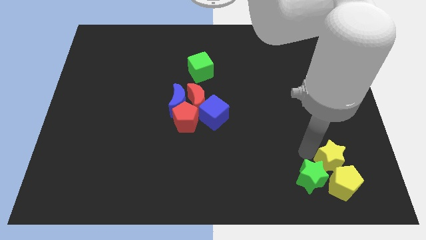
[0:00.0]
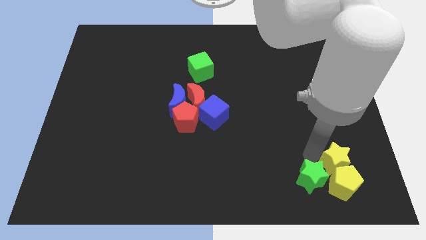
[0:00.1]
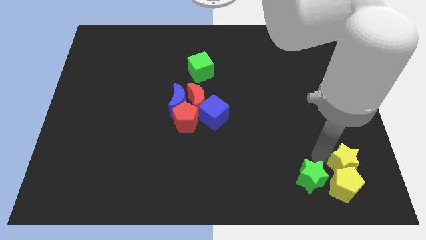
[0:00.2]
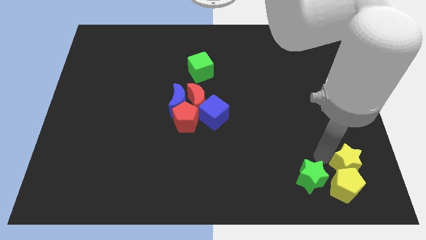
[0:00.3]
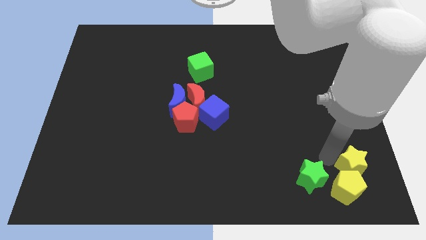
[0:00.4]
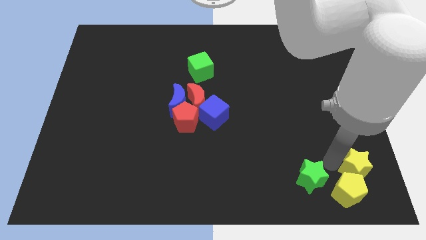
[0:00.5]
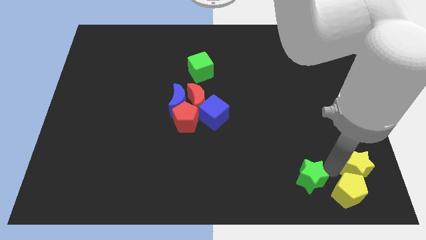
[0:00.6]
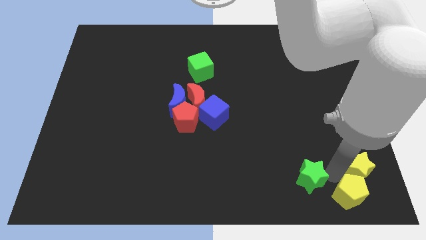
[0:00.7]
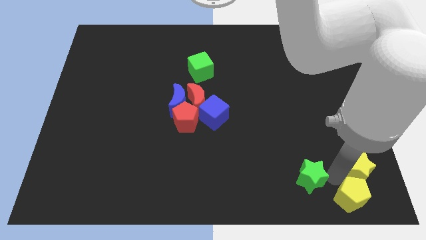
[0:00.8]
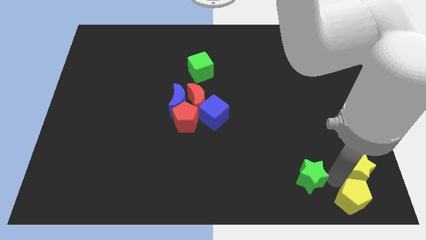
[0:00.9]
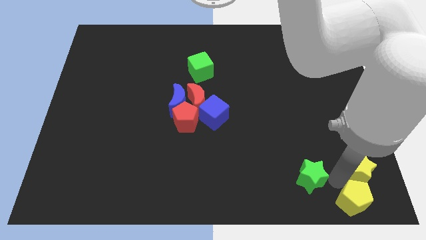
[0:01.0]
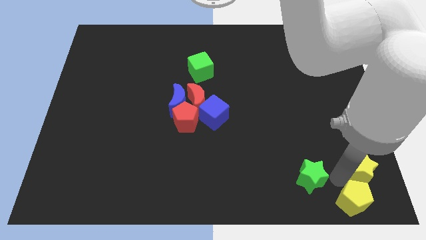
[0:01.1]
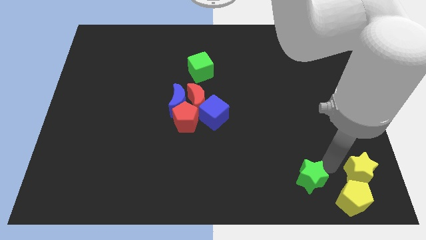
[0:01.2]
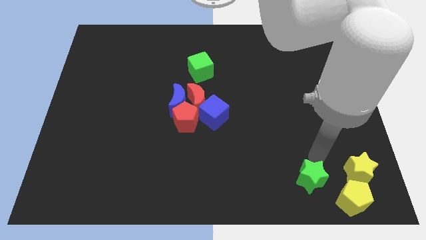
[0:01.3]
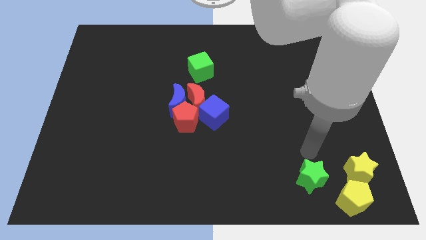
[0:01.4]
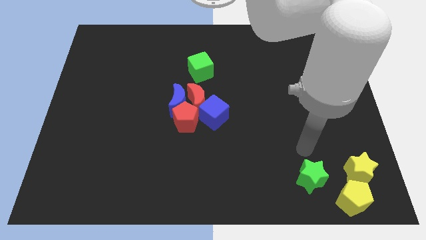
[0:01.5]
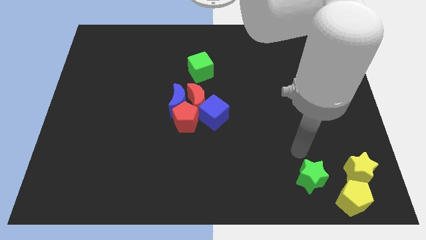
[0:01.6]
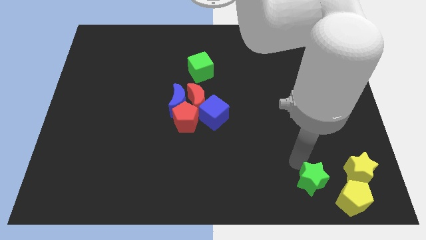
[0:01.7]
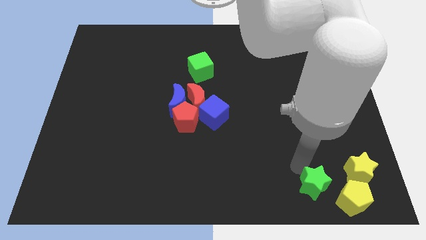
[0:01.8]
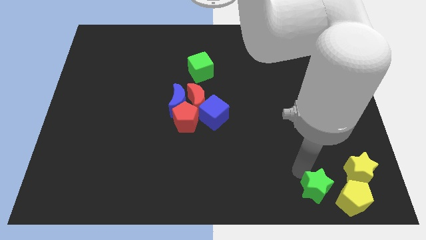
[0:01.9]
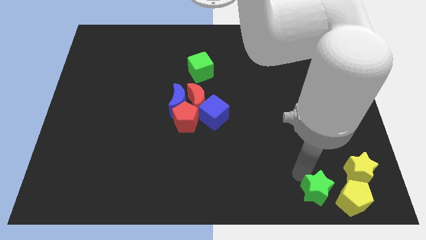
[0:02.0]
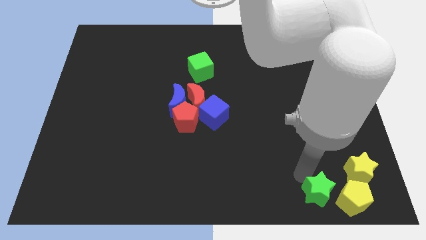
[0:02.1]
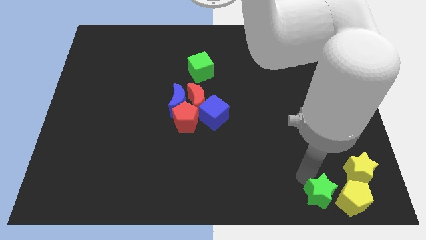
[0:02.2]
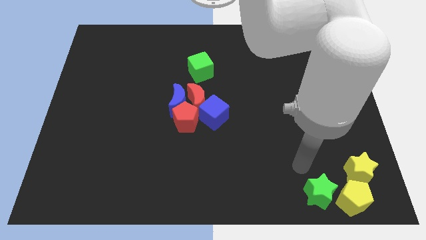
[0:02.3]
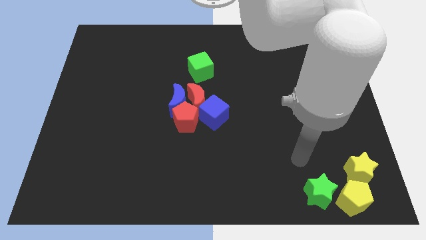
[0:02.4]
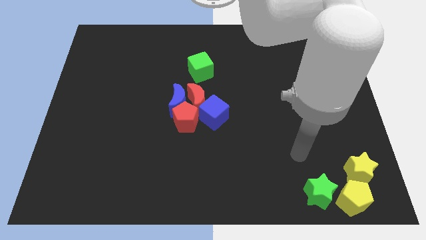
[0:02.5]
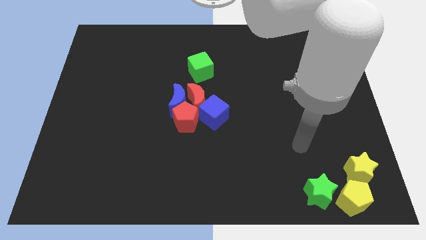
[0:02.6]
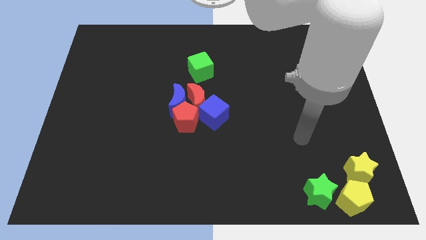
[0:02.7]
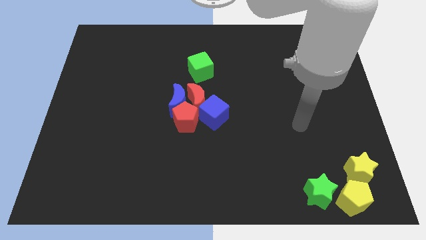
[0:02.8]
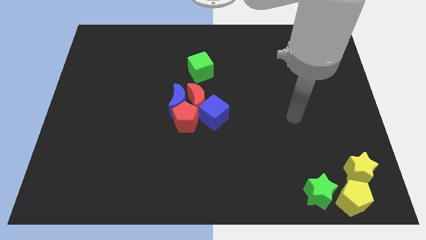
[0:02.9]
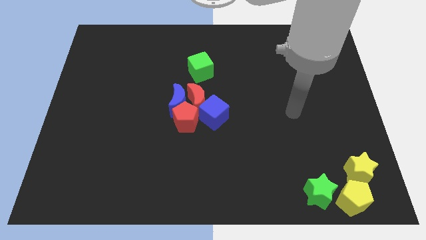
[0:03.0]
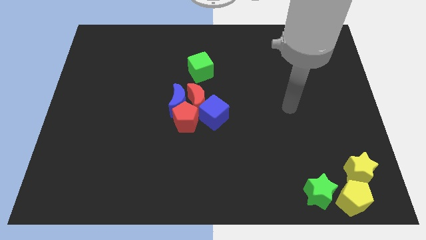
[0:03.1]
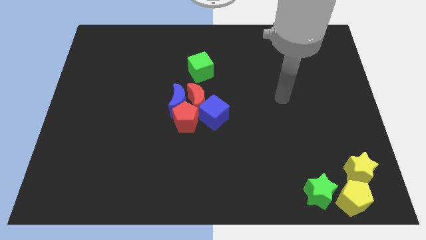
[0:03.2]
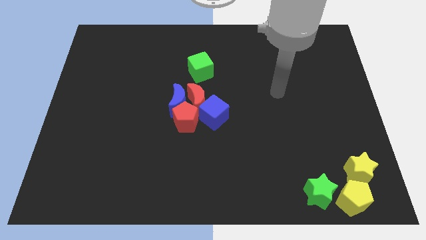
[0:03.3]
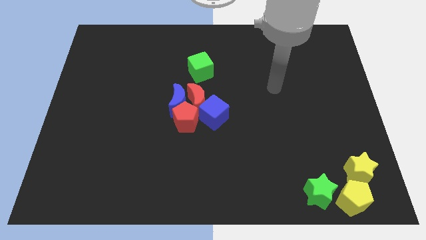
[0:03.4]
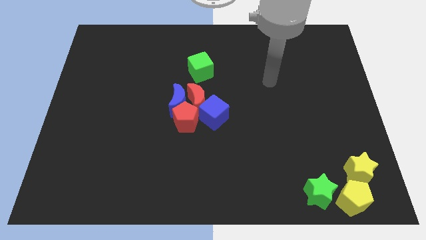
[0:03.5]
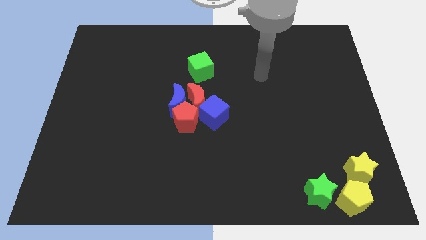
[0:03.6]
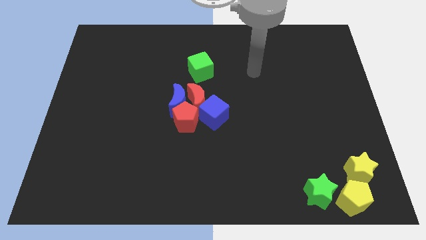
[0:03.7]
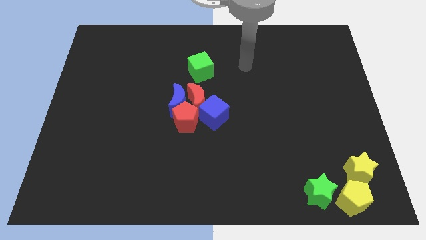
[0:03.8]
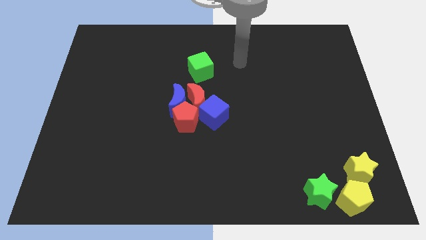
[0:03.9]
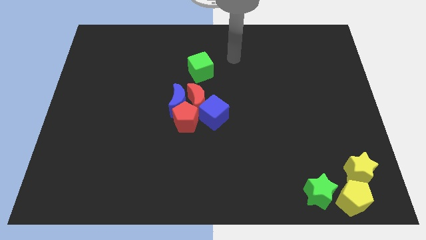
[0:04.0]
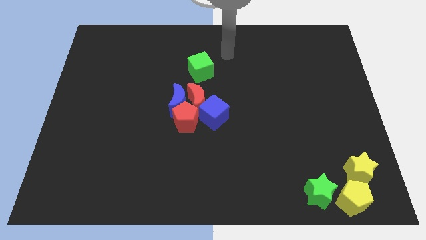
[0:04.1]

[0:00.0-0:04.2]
move the yellow pentagon with the yellow star at the bottom right corner of the board

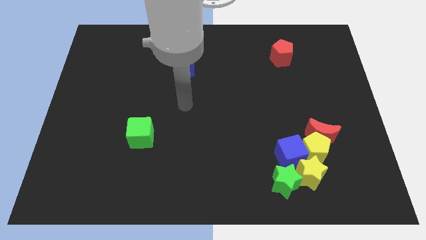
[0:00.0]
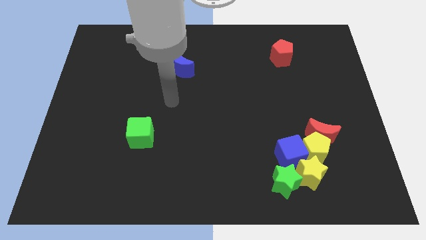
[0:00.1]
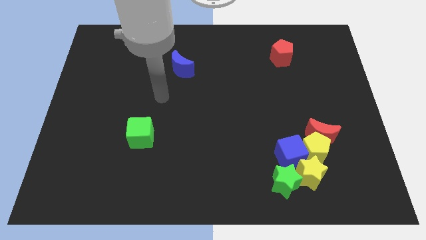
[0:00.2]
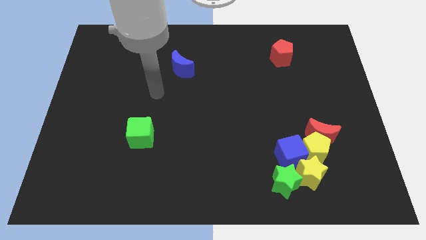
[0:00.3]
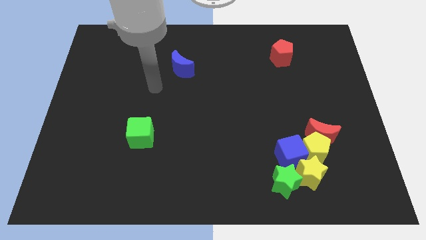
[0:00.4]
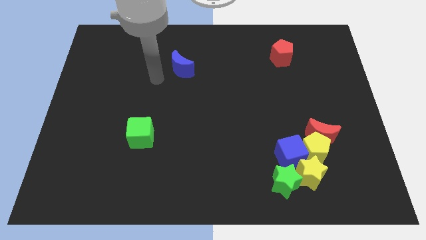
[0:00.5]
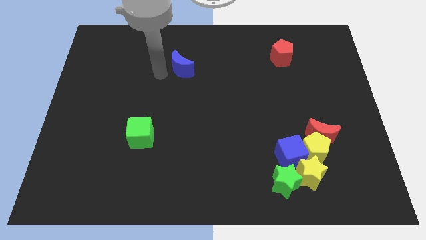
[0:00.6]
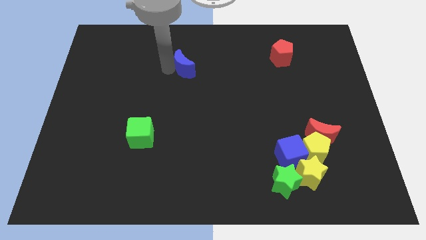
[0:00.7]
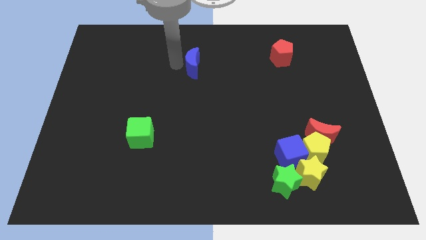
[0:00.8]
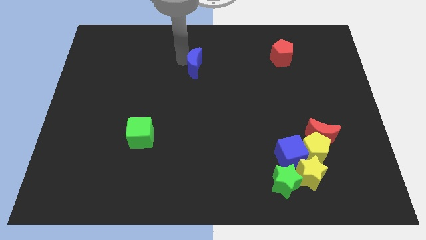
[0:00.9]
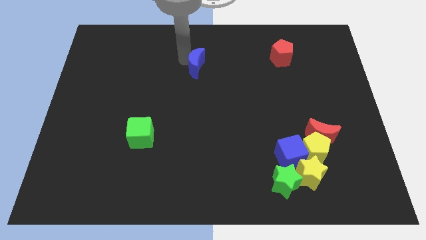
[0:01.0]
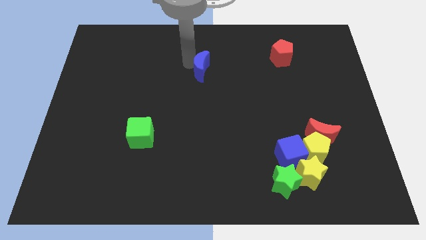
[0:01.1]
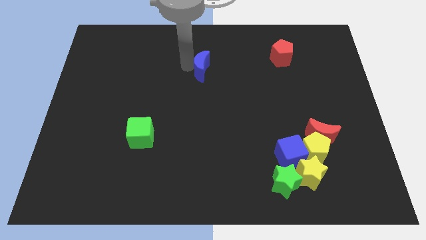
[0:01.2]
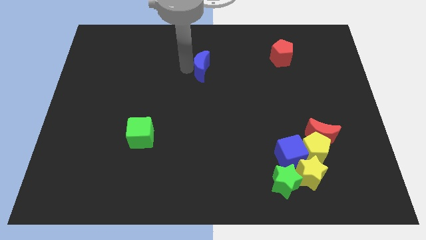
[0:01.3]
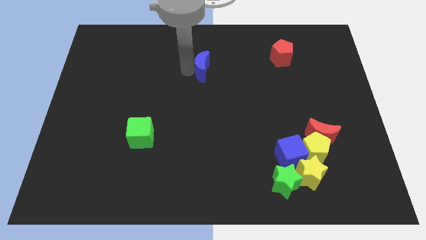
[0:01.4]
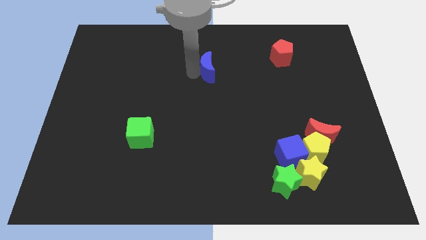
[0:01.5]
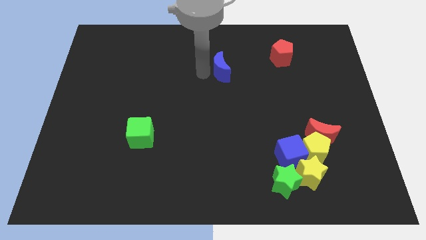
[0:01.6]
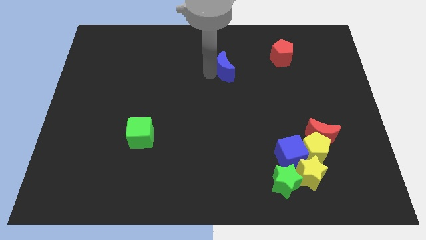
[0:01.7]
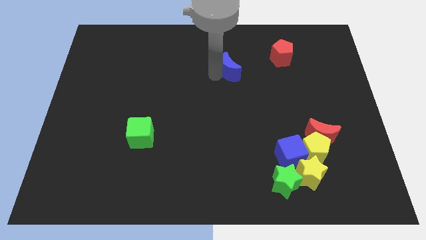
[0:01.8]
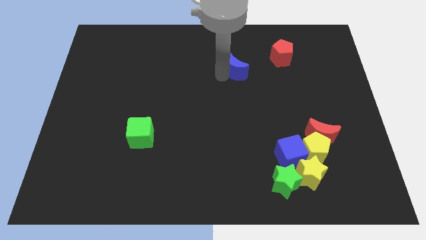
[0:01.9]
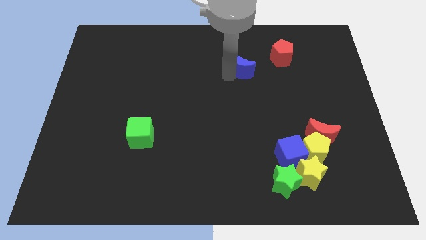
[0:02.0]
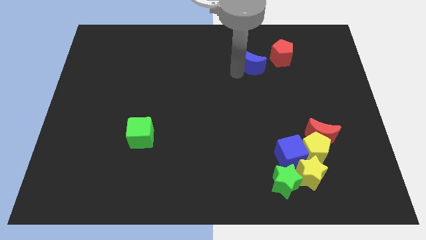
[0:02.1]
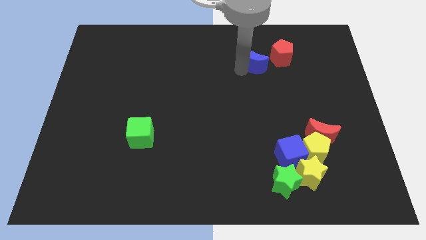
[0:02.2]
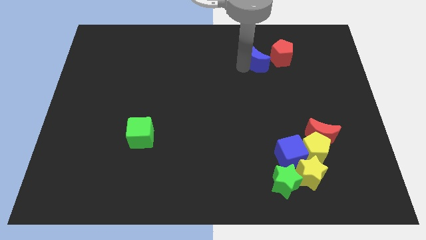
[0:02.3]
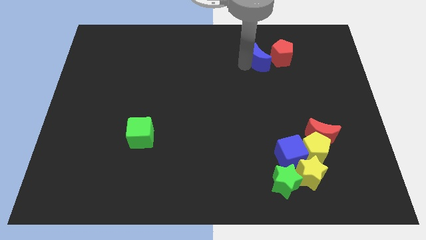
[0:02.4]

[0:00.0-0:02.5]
slide the blue crescent towards the red pentagon on top of the right corner

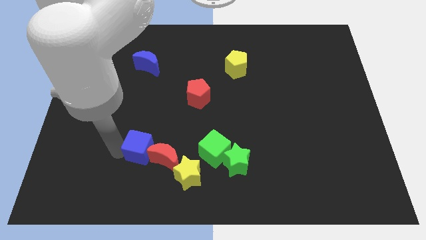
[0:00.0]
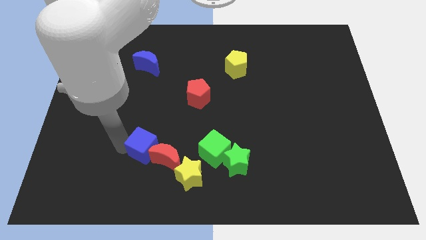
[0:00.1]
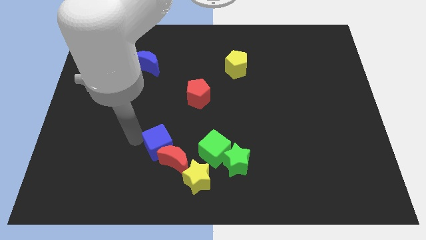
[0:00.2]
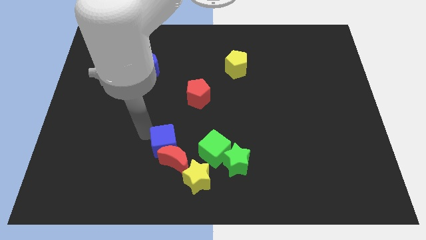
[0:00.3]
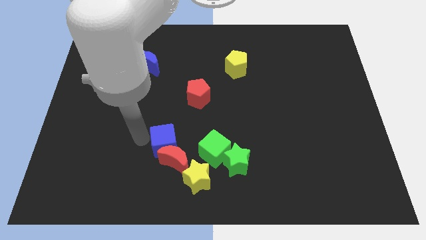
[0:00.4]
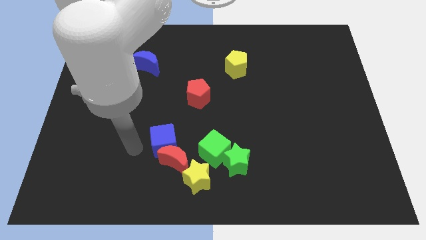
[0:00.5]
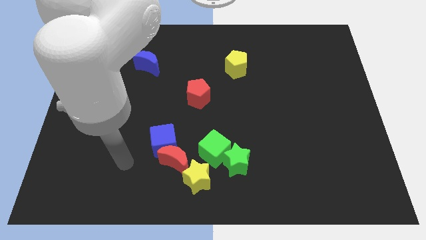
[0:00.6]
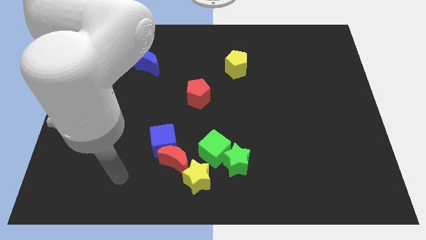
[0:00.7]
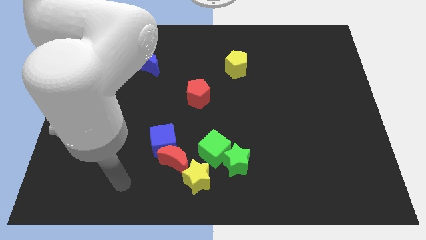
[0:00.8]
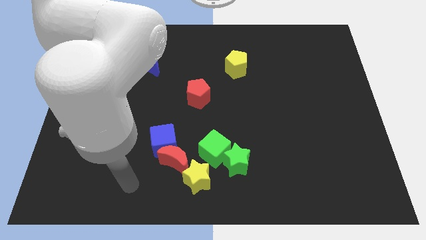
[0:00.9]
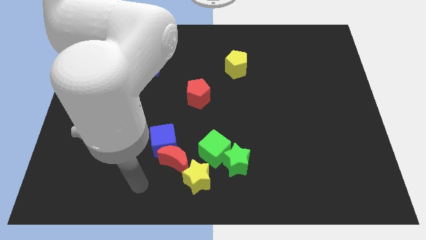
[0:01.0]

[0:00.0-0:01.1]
push the blue cube into the red moon

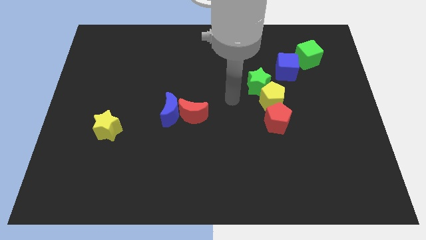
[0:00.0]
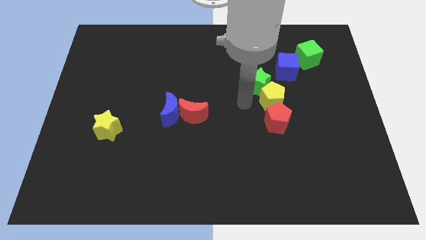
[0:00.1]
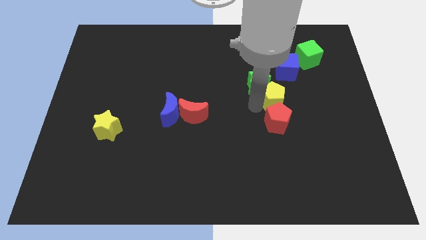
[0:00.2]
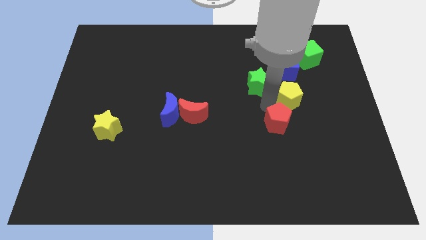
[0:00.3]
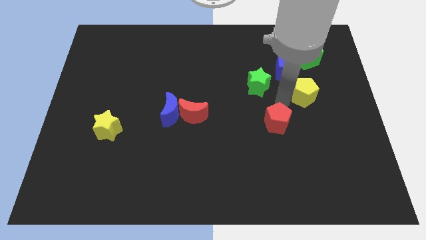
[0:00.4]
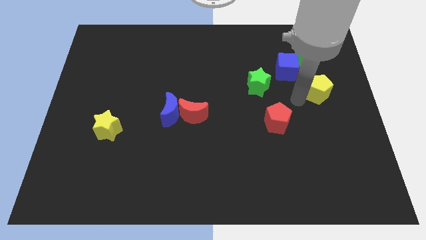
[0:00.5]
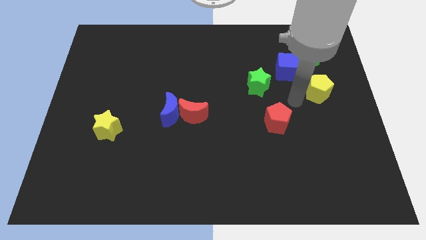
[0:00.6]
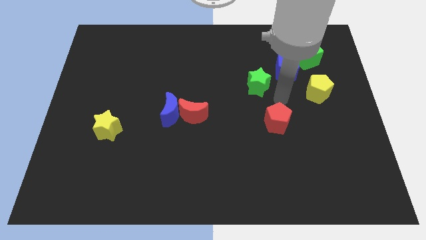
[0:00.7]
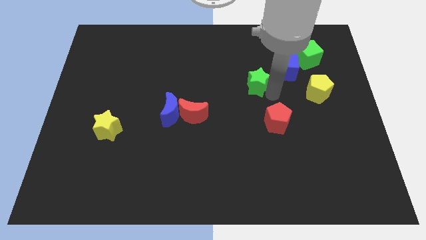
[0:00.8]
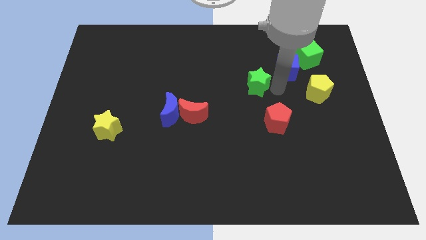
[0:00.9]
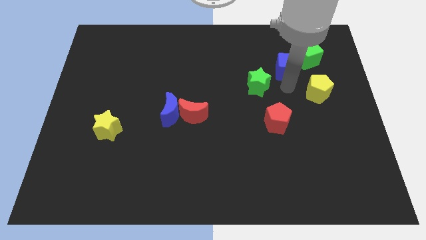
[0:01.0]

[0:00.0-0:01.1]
push the yellow pentagon away from the vertical line on the board
